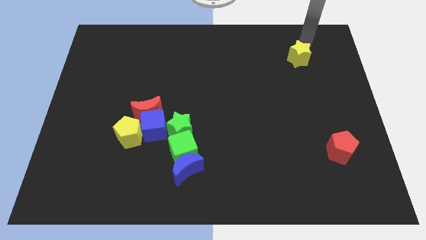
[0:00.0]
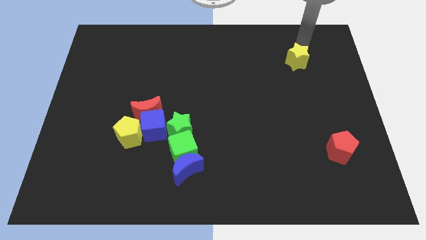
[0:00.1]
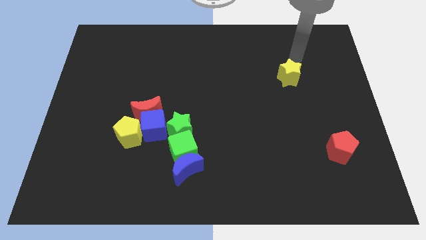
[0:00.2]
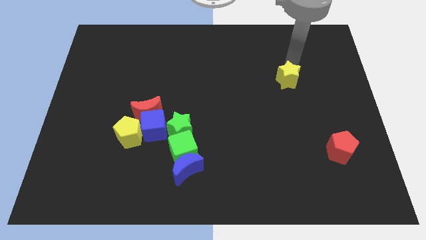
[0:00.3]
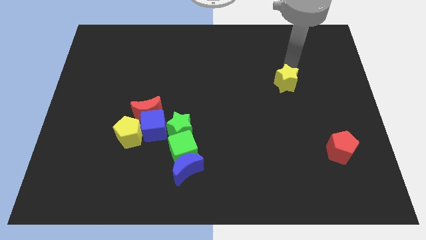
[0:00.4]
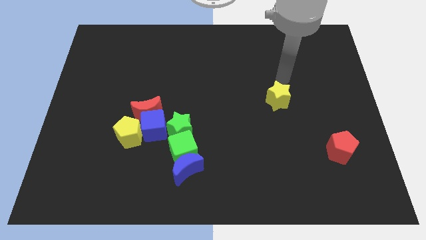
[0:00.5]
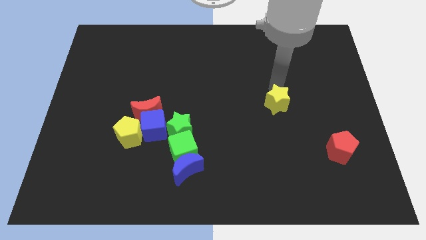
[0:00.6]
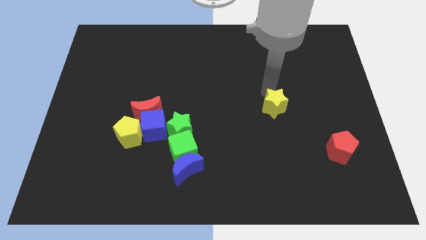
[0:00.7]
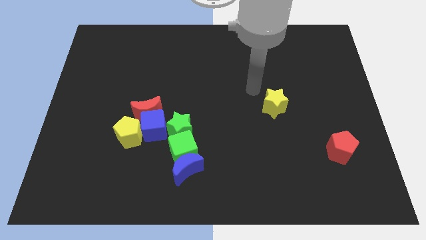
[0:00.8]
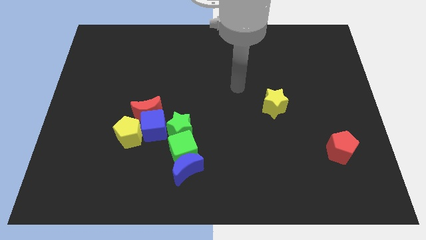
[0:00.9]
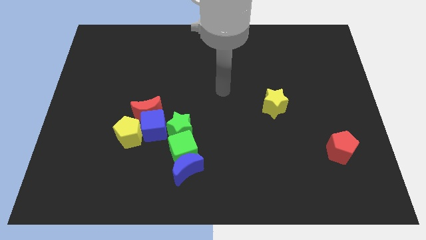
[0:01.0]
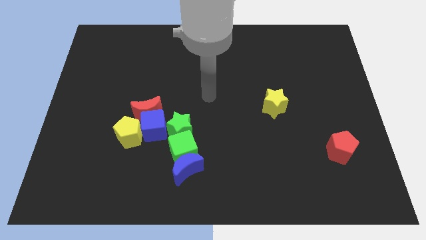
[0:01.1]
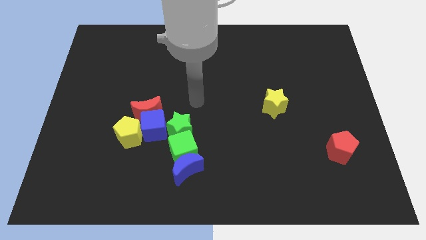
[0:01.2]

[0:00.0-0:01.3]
push the yellow star to the top left of the red pentagon

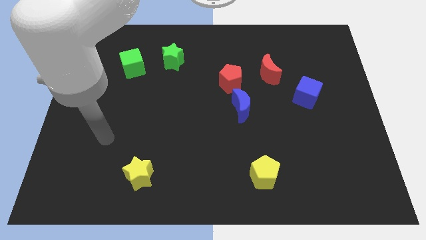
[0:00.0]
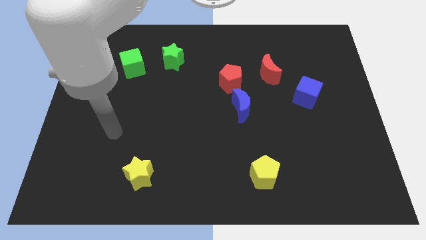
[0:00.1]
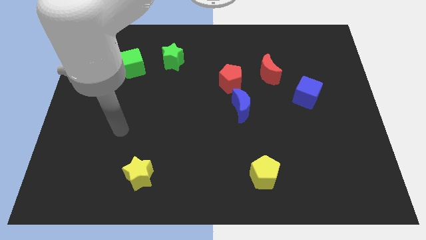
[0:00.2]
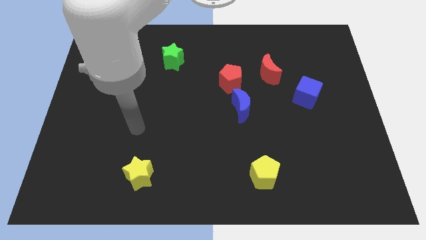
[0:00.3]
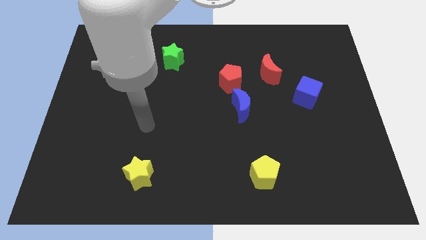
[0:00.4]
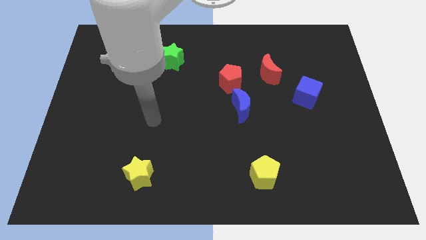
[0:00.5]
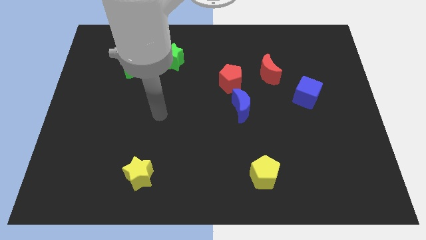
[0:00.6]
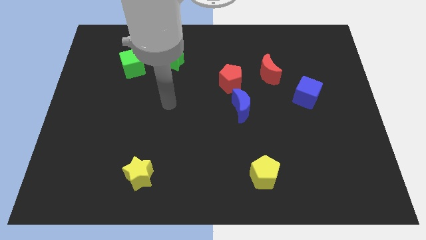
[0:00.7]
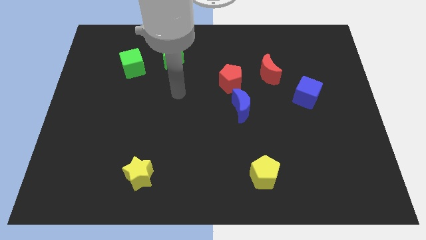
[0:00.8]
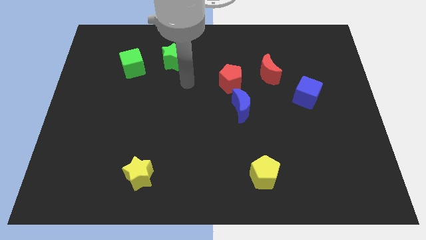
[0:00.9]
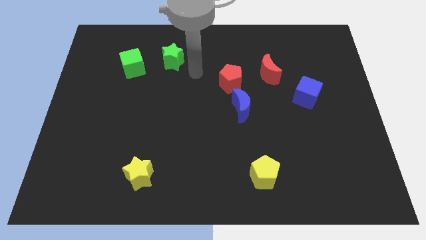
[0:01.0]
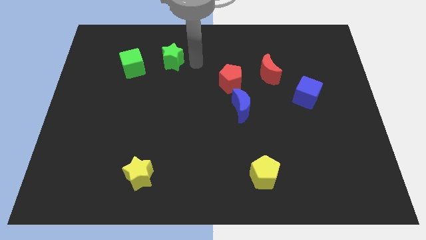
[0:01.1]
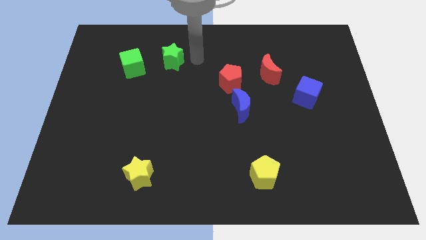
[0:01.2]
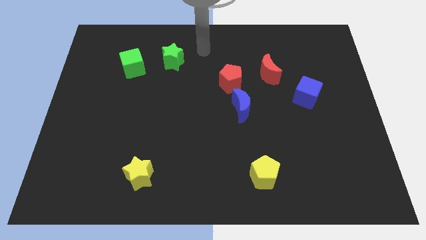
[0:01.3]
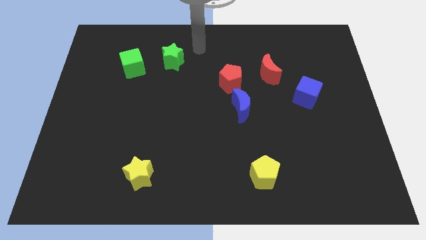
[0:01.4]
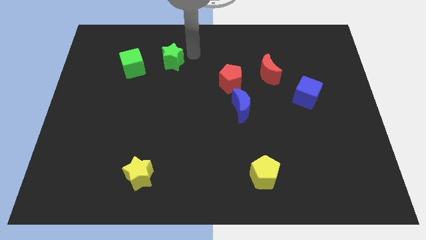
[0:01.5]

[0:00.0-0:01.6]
place your arm to the right side of green star

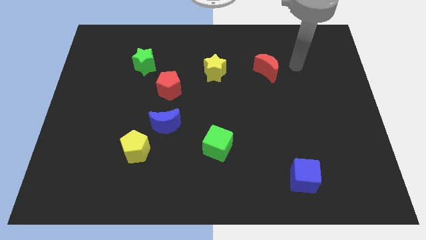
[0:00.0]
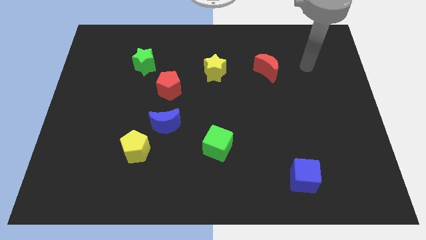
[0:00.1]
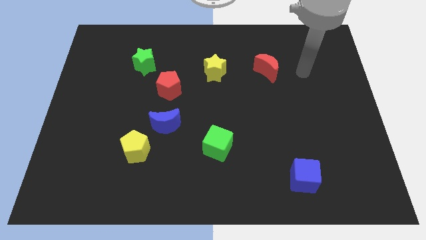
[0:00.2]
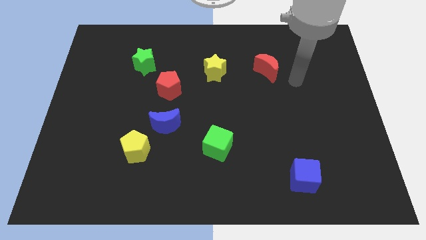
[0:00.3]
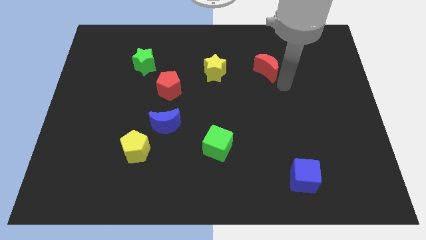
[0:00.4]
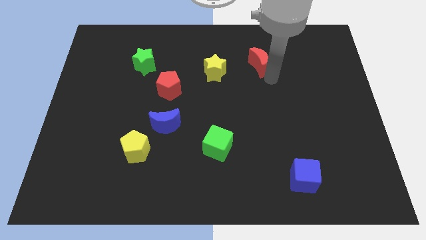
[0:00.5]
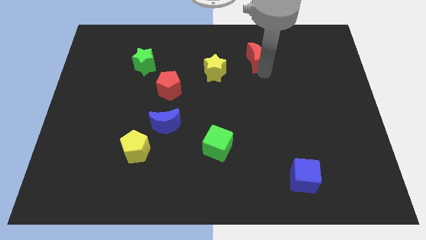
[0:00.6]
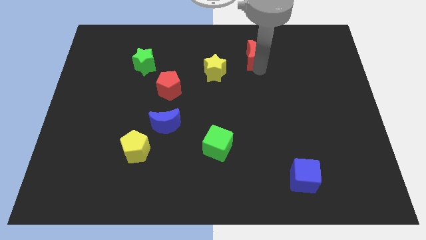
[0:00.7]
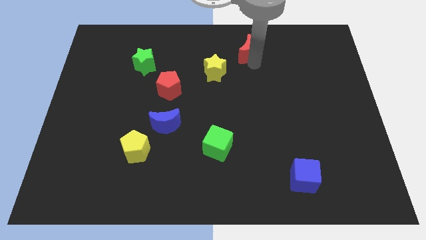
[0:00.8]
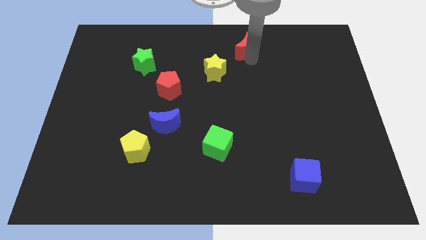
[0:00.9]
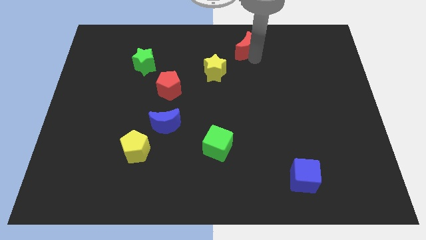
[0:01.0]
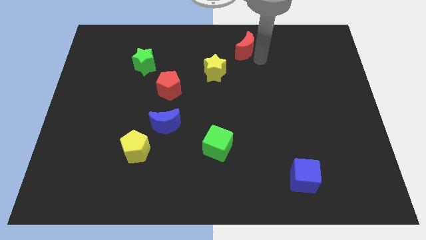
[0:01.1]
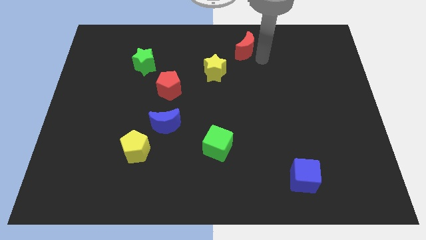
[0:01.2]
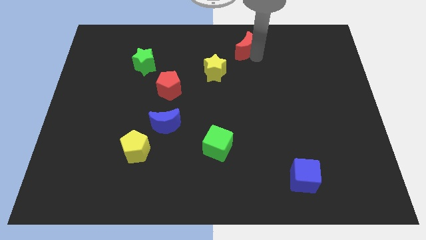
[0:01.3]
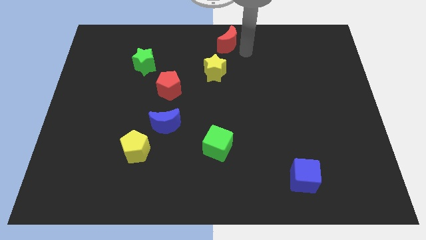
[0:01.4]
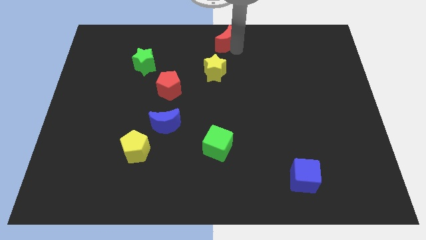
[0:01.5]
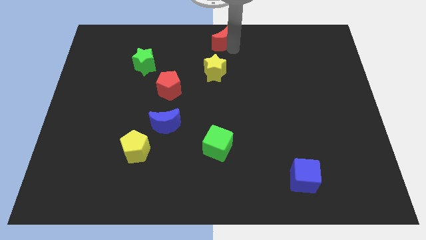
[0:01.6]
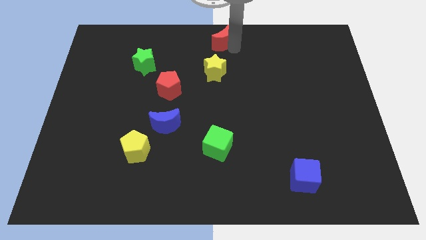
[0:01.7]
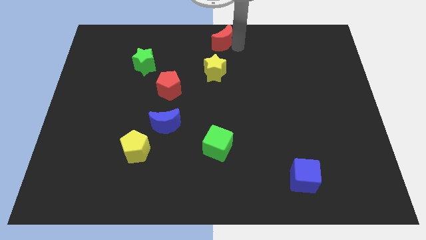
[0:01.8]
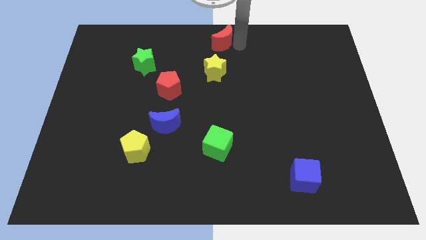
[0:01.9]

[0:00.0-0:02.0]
place the red moon above the yellow star

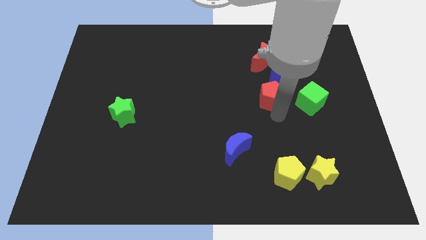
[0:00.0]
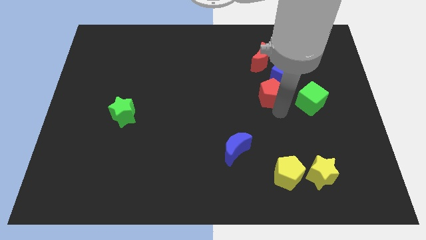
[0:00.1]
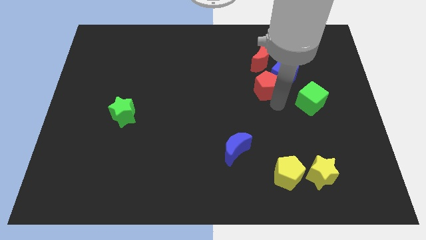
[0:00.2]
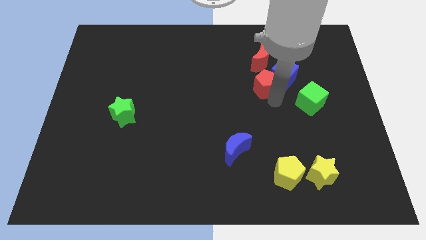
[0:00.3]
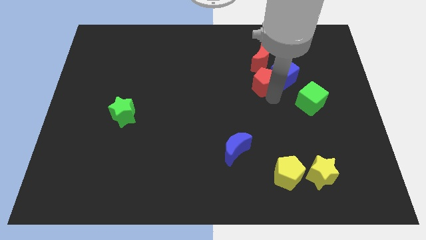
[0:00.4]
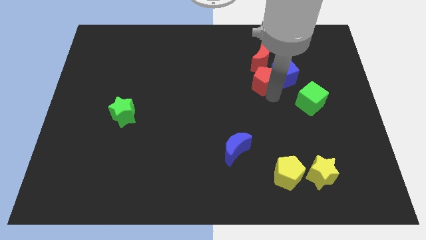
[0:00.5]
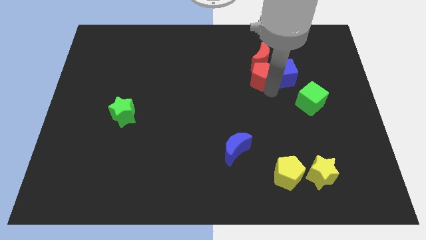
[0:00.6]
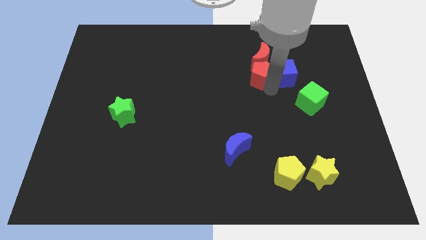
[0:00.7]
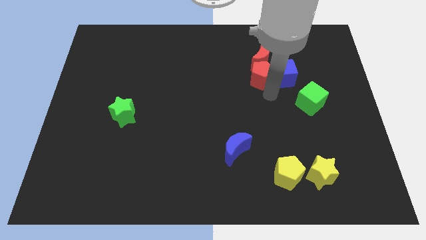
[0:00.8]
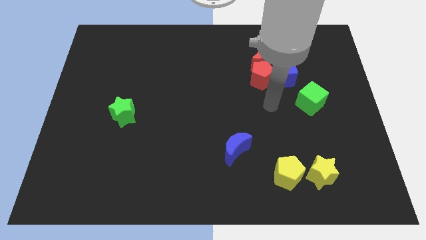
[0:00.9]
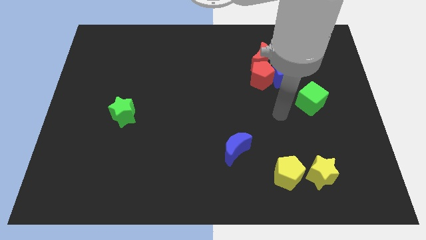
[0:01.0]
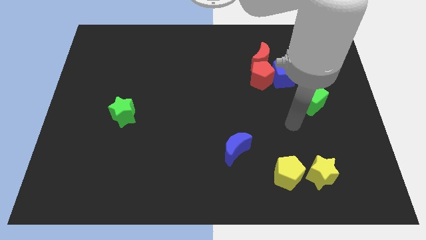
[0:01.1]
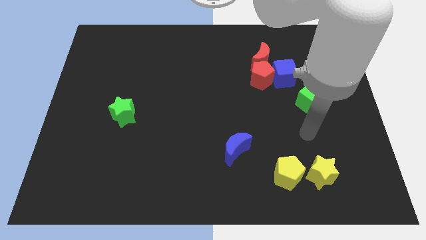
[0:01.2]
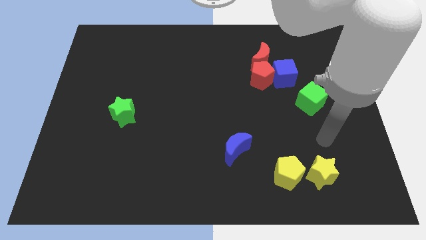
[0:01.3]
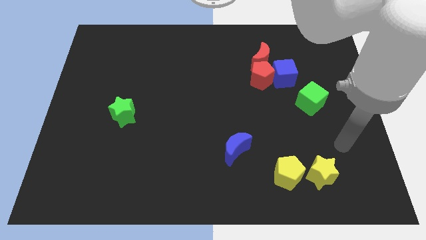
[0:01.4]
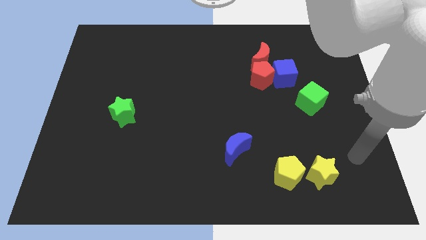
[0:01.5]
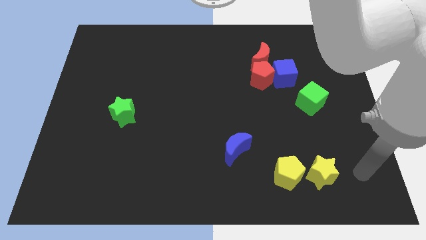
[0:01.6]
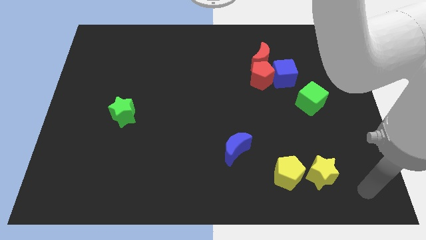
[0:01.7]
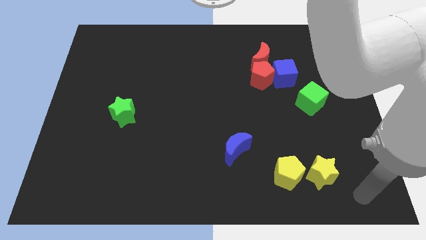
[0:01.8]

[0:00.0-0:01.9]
adjust the red pentagon parallel left to the blue cube

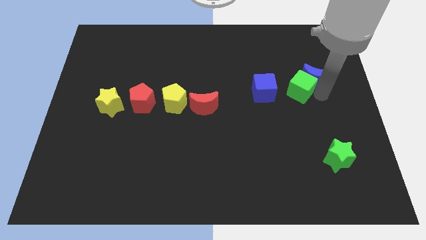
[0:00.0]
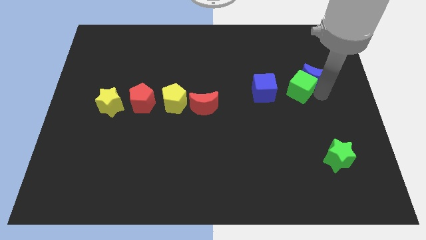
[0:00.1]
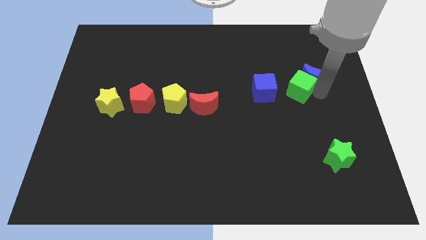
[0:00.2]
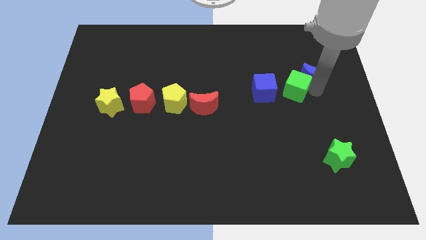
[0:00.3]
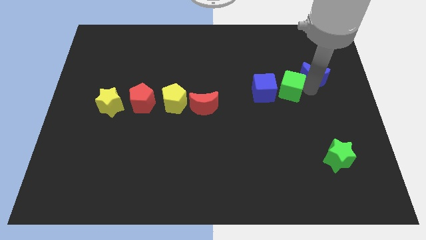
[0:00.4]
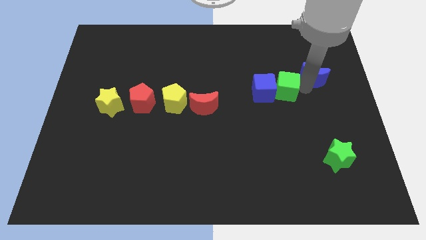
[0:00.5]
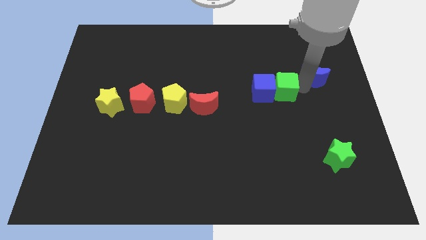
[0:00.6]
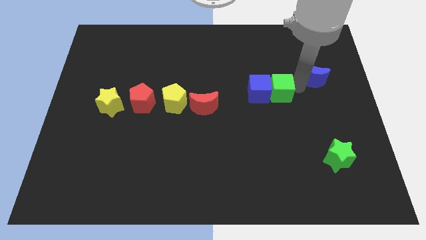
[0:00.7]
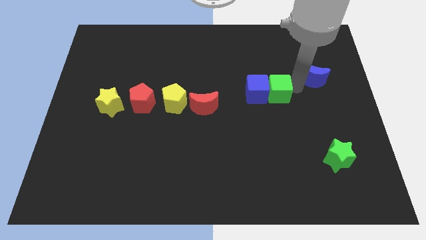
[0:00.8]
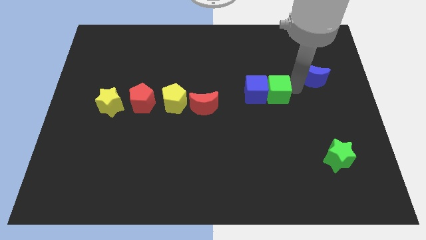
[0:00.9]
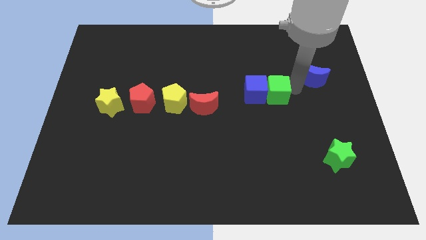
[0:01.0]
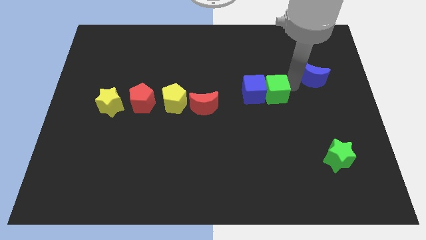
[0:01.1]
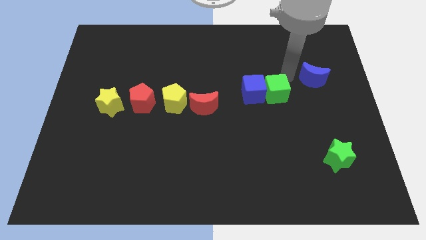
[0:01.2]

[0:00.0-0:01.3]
move green cube into blue cube

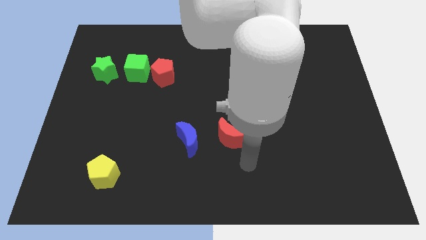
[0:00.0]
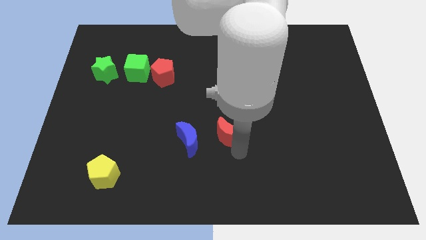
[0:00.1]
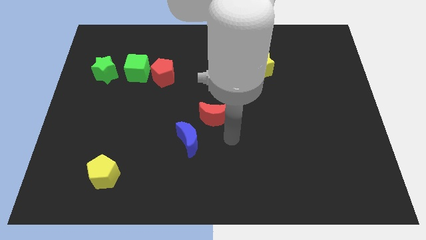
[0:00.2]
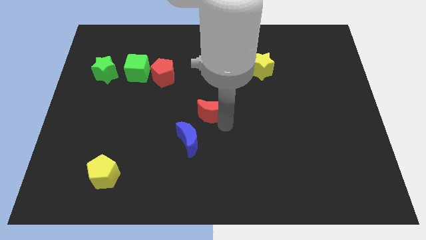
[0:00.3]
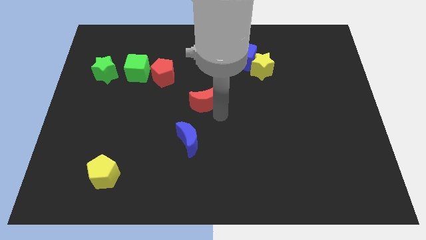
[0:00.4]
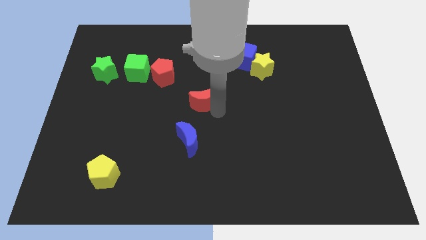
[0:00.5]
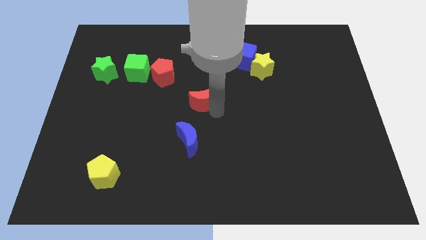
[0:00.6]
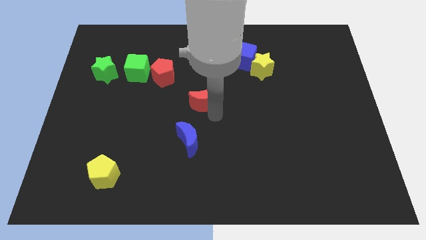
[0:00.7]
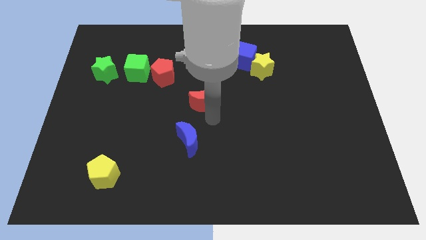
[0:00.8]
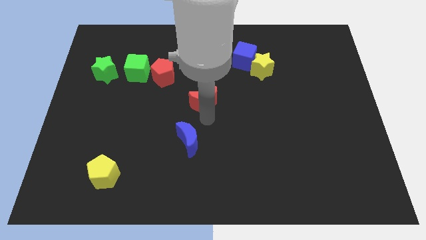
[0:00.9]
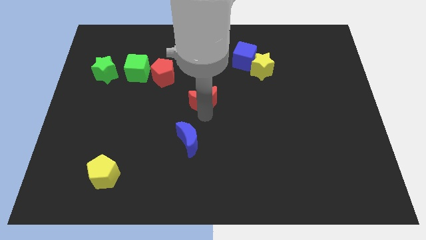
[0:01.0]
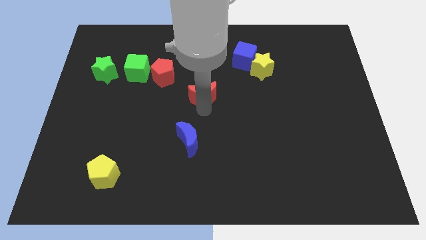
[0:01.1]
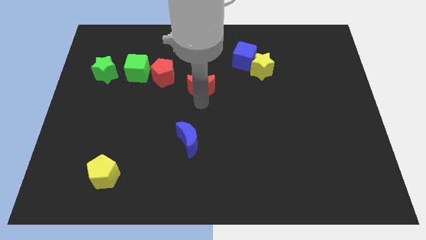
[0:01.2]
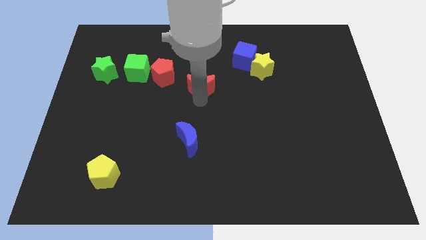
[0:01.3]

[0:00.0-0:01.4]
move the red crescent towards the top center of the board
